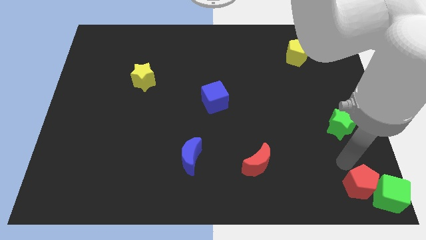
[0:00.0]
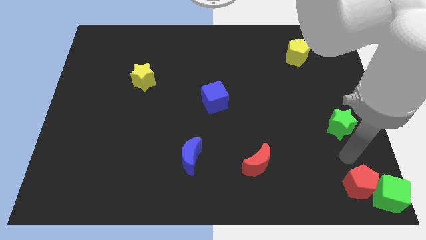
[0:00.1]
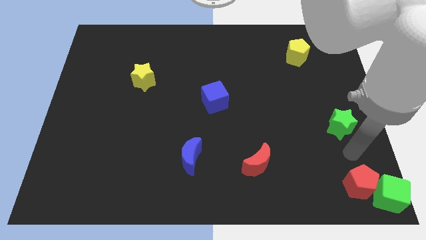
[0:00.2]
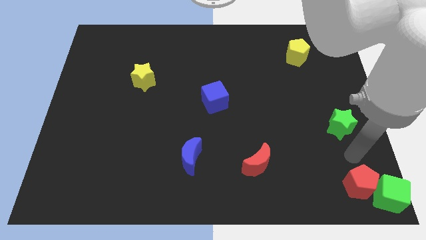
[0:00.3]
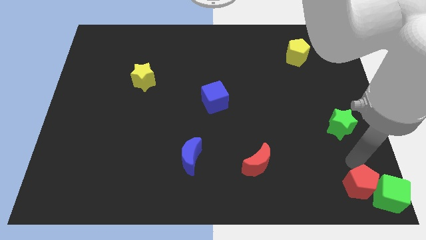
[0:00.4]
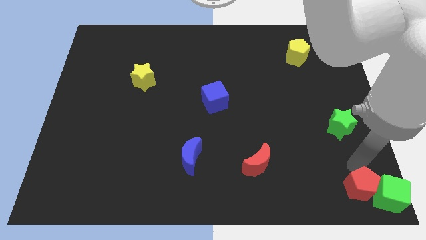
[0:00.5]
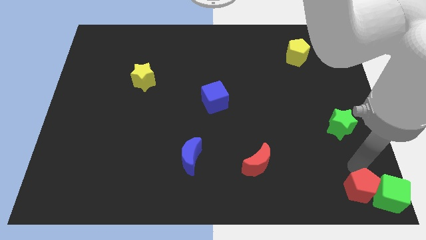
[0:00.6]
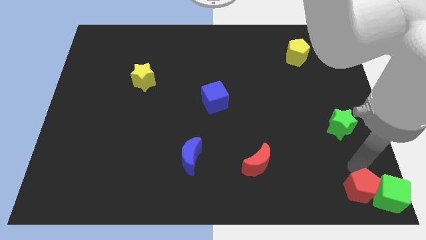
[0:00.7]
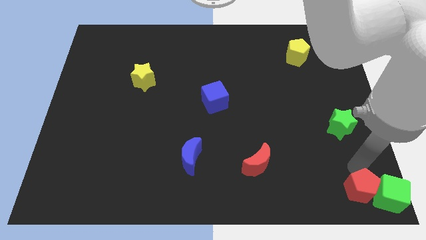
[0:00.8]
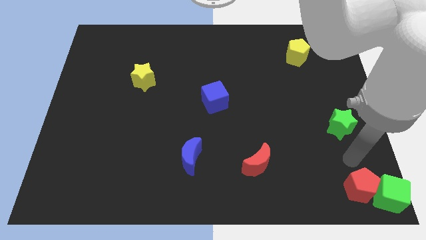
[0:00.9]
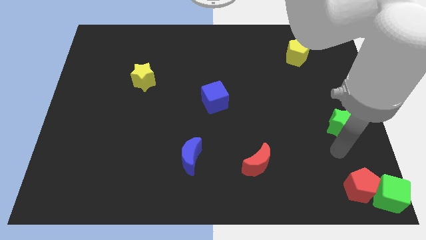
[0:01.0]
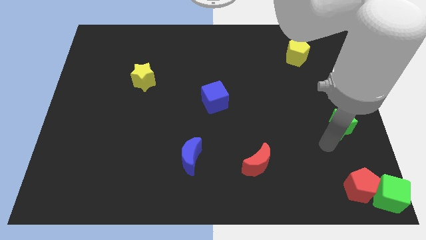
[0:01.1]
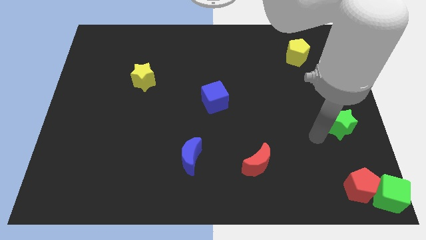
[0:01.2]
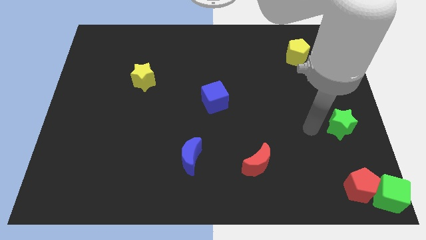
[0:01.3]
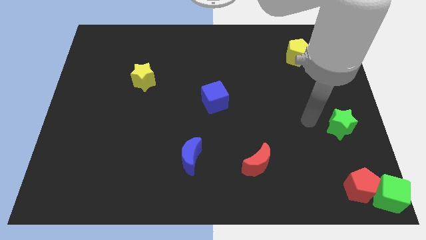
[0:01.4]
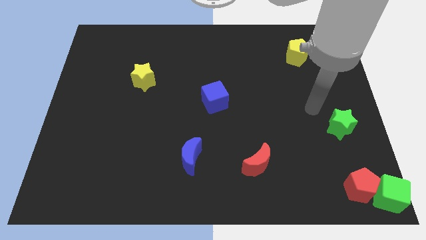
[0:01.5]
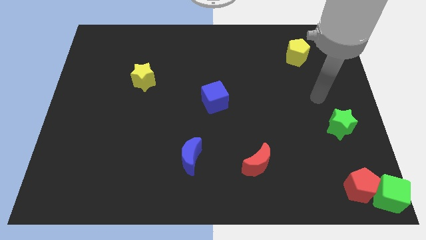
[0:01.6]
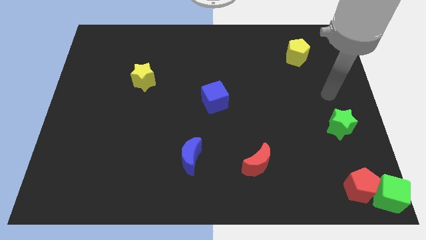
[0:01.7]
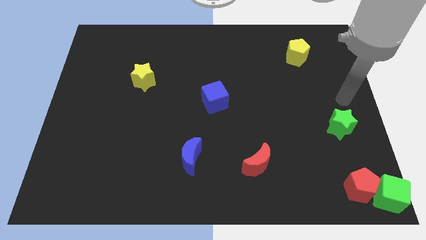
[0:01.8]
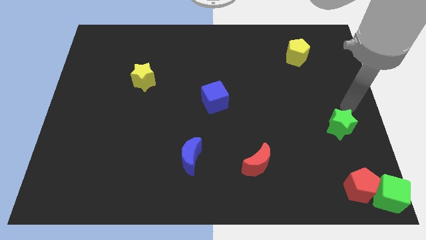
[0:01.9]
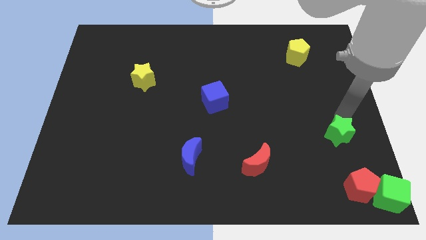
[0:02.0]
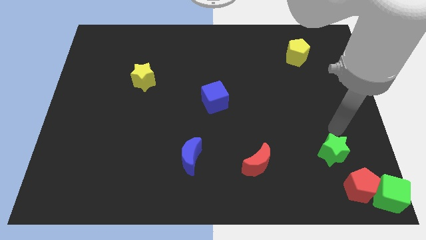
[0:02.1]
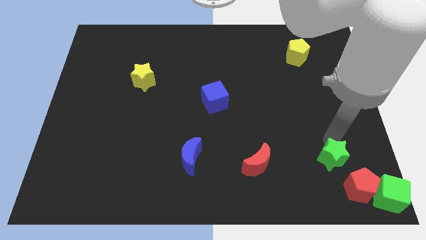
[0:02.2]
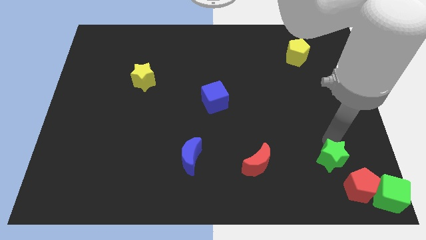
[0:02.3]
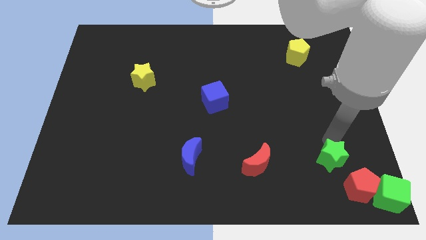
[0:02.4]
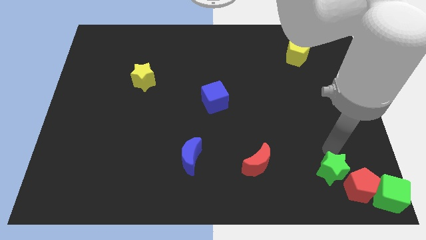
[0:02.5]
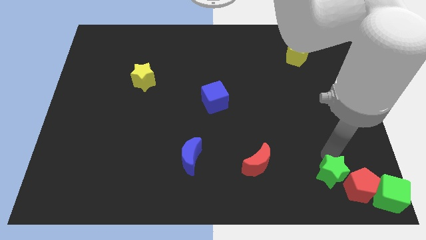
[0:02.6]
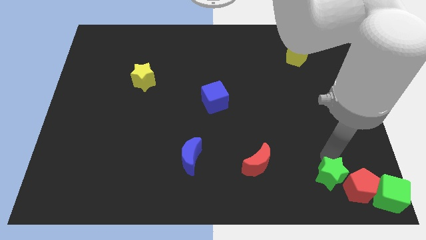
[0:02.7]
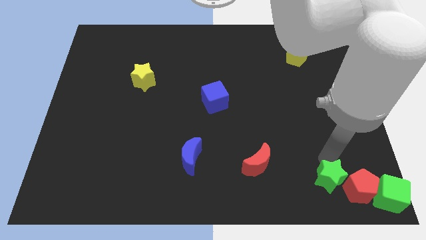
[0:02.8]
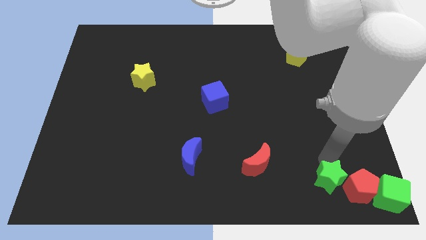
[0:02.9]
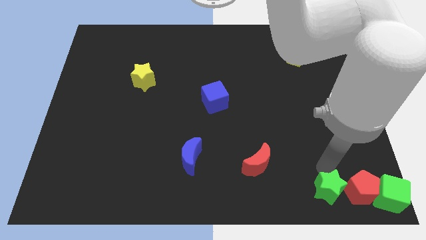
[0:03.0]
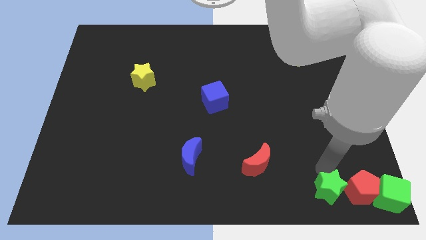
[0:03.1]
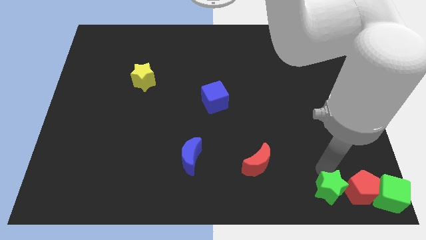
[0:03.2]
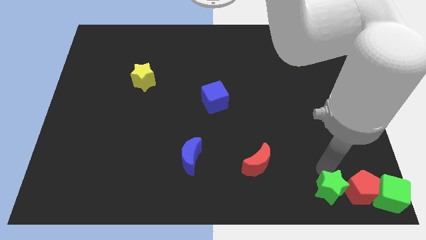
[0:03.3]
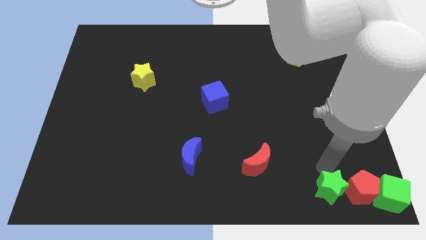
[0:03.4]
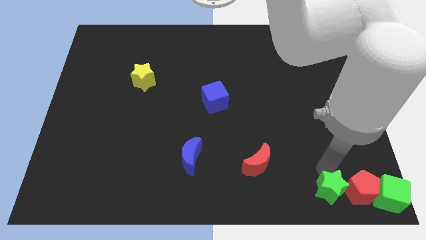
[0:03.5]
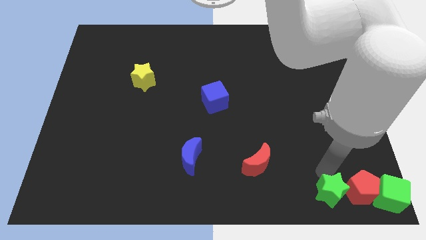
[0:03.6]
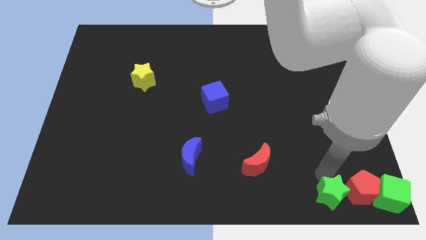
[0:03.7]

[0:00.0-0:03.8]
push the green star to the left side of the red pentagon

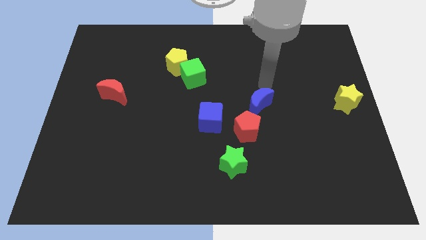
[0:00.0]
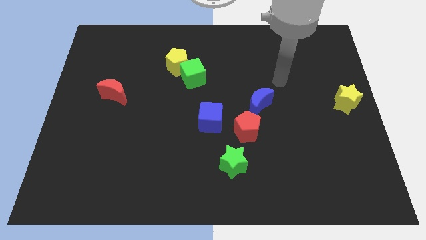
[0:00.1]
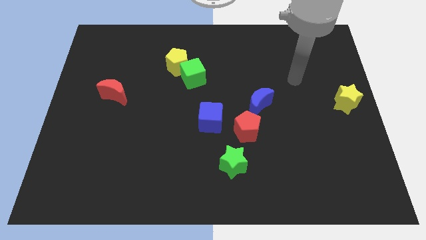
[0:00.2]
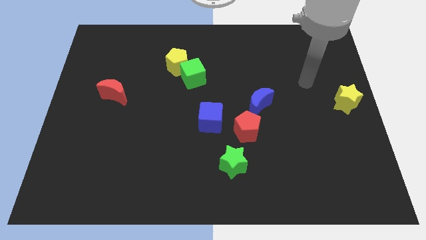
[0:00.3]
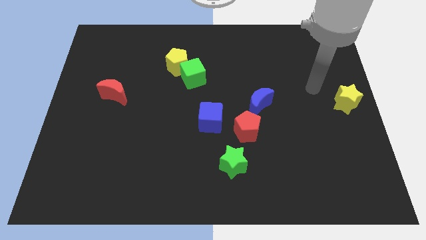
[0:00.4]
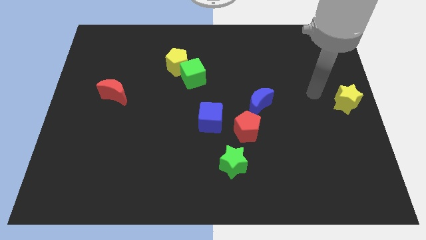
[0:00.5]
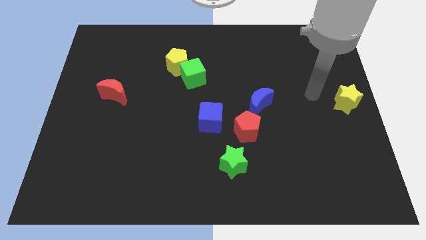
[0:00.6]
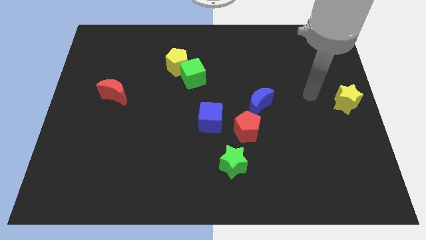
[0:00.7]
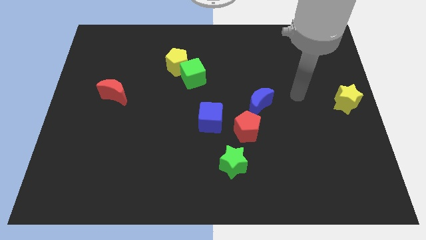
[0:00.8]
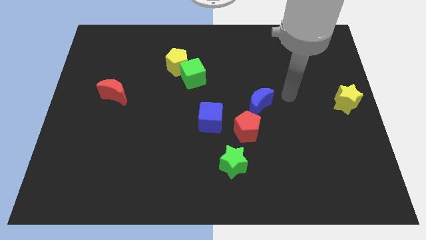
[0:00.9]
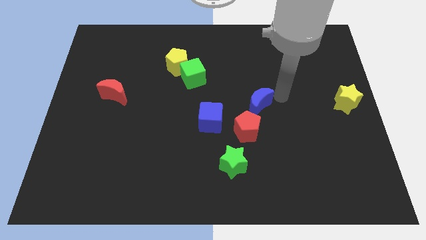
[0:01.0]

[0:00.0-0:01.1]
point your arm at the top right side of blue moon

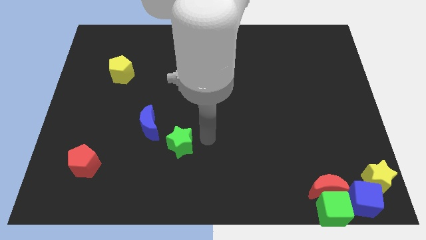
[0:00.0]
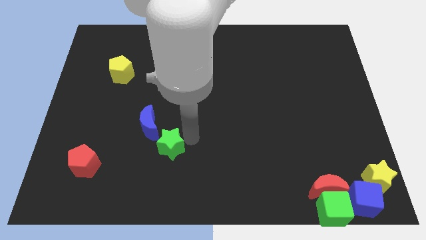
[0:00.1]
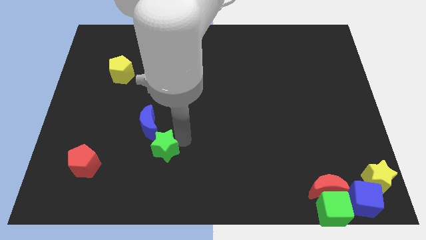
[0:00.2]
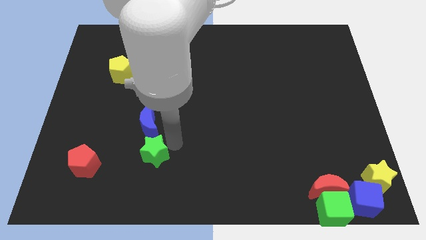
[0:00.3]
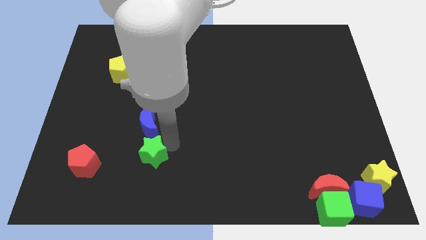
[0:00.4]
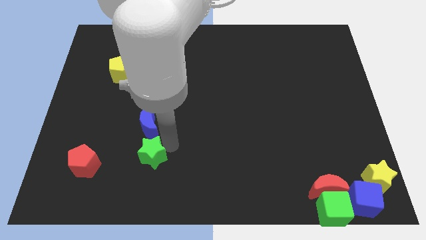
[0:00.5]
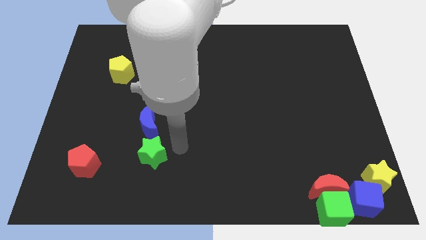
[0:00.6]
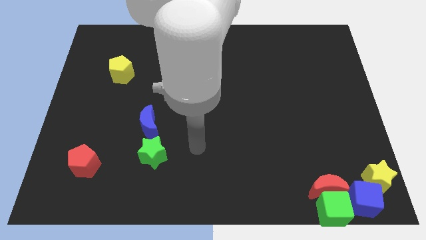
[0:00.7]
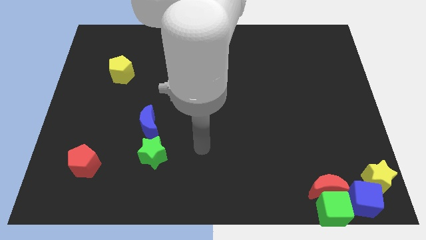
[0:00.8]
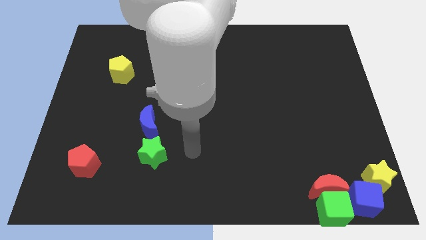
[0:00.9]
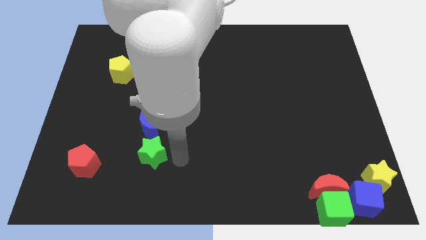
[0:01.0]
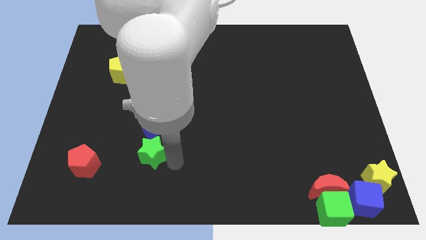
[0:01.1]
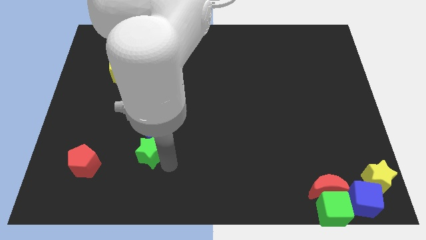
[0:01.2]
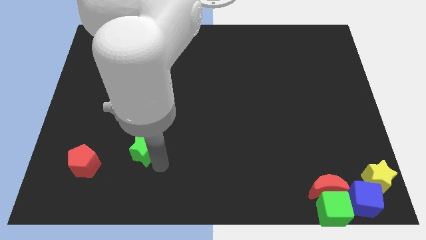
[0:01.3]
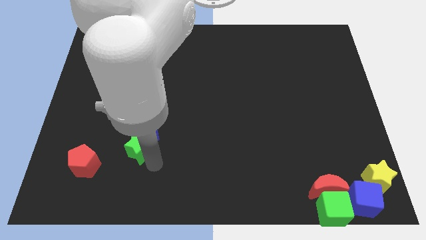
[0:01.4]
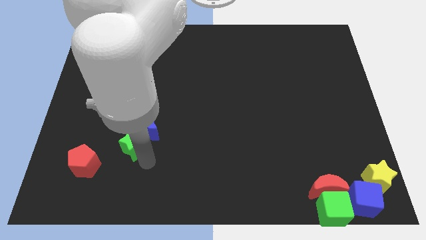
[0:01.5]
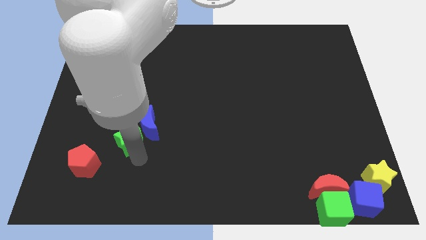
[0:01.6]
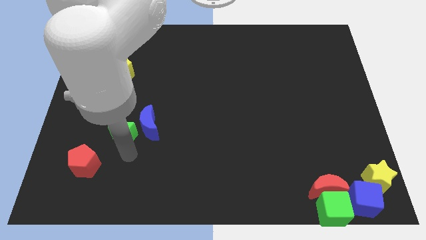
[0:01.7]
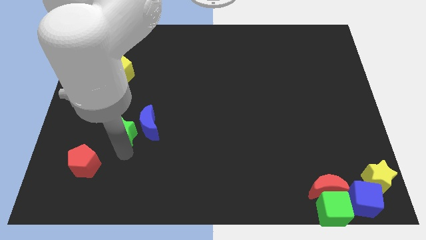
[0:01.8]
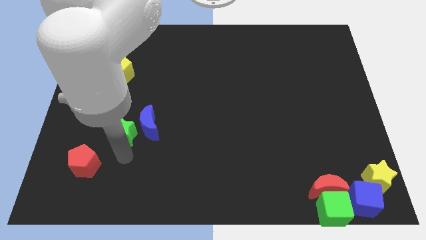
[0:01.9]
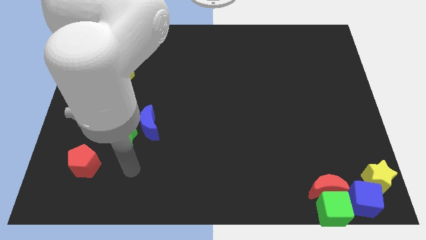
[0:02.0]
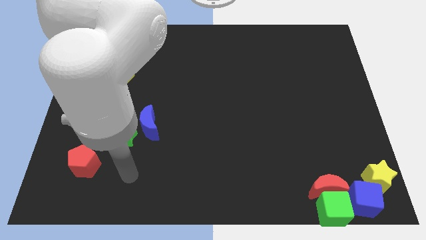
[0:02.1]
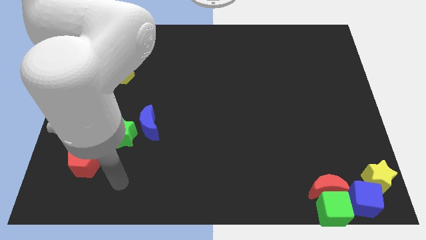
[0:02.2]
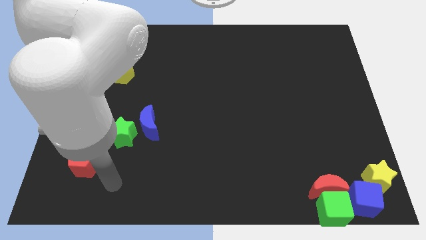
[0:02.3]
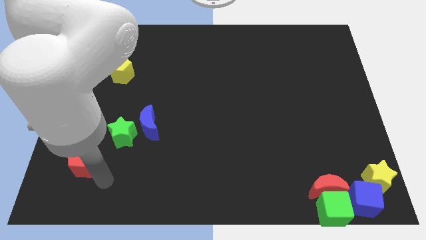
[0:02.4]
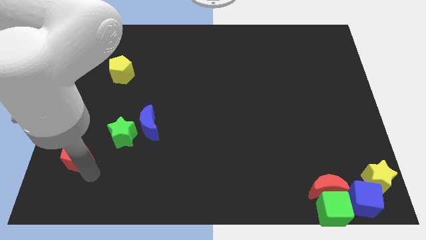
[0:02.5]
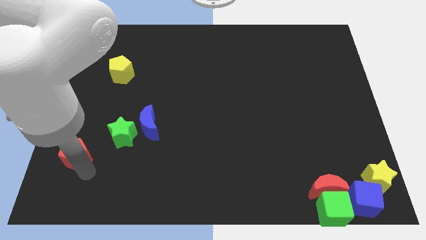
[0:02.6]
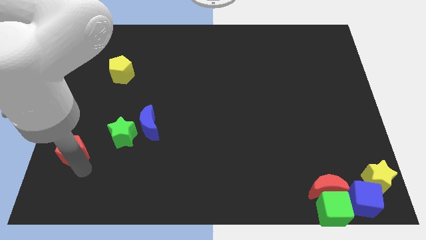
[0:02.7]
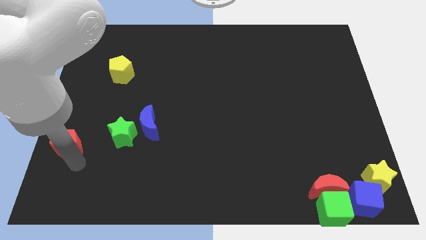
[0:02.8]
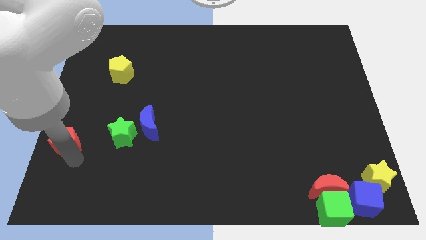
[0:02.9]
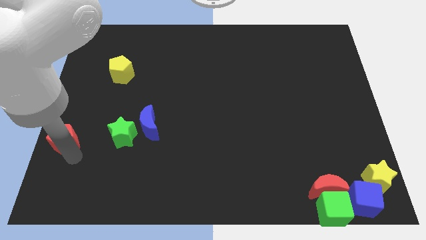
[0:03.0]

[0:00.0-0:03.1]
place a green star to the left of the blue moon

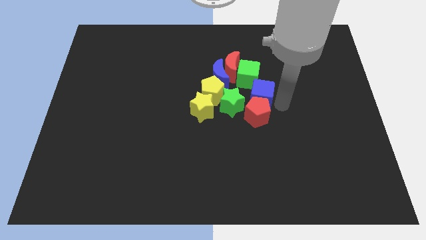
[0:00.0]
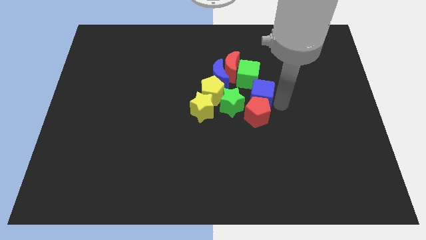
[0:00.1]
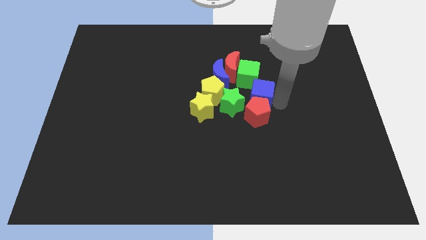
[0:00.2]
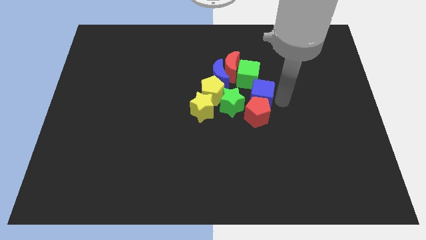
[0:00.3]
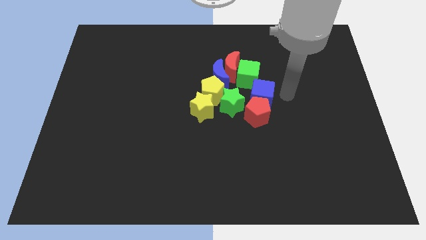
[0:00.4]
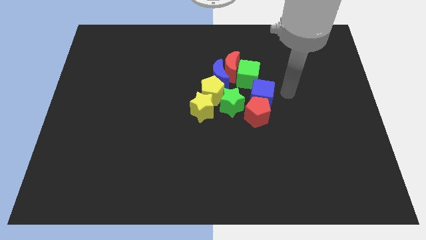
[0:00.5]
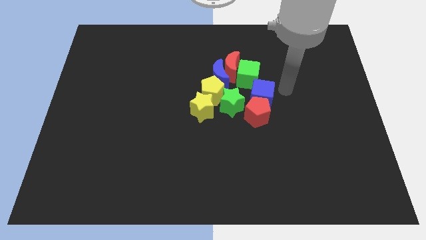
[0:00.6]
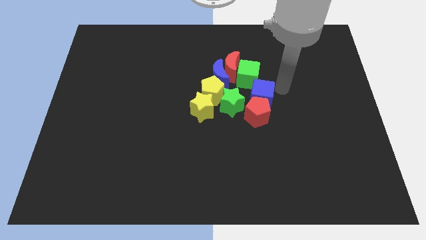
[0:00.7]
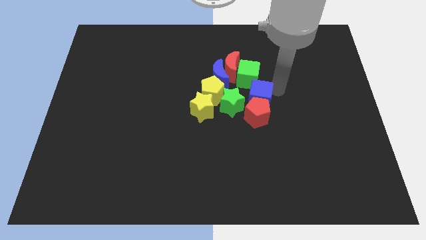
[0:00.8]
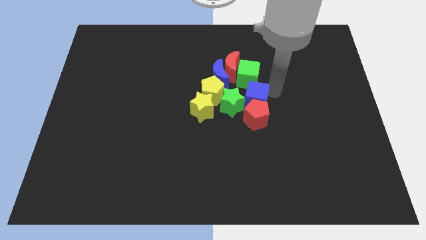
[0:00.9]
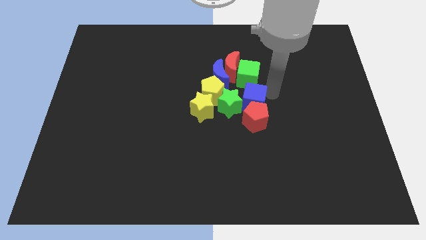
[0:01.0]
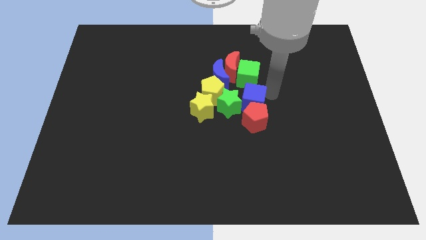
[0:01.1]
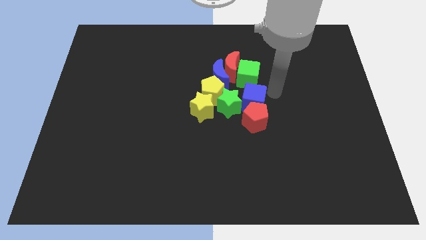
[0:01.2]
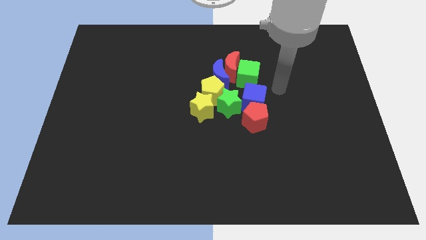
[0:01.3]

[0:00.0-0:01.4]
slightly move the blue cube towards the left
